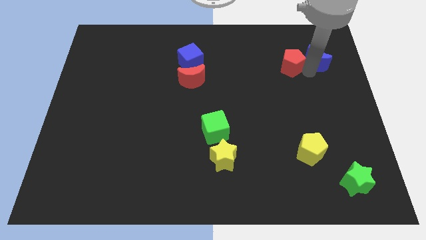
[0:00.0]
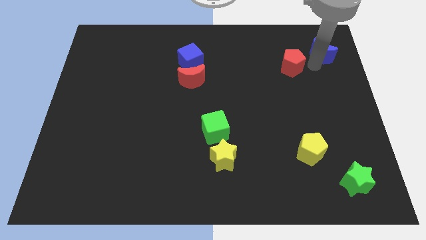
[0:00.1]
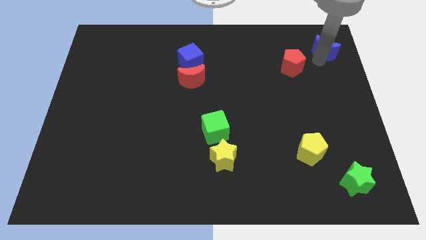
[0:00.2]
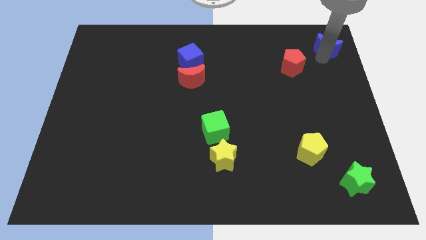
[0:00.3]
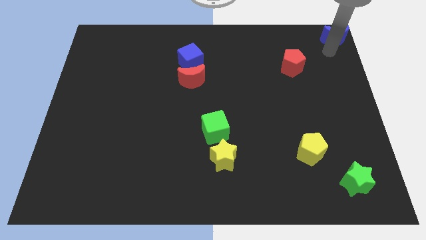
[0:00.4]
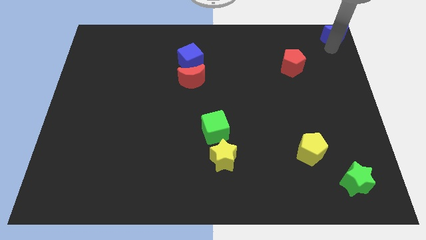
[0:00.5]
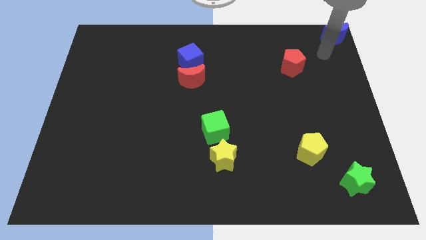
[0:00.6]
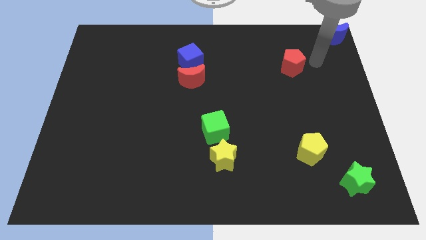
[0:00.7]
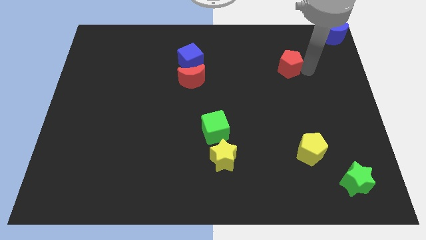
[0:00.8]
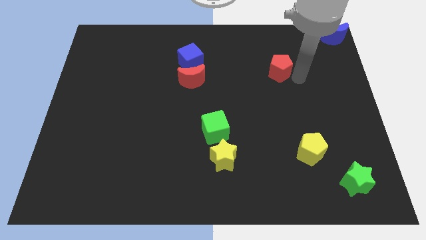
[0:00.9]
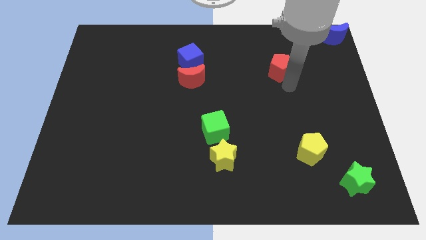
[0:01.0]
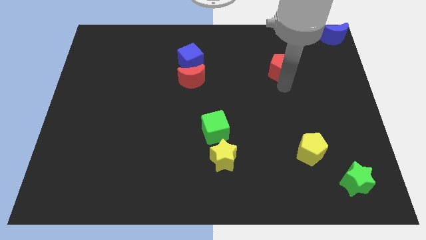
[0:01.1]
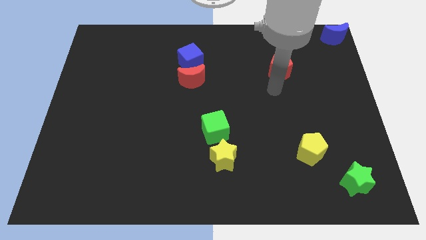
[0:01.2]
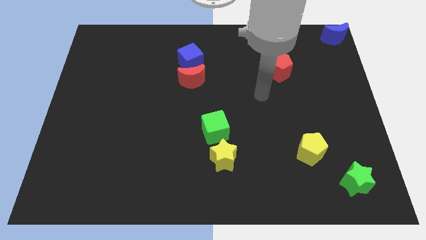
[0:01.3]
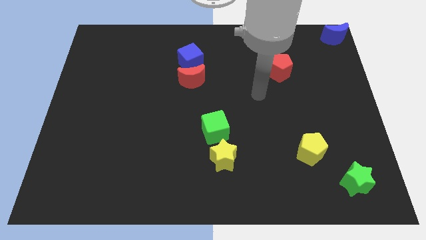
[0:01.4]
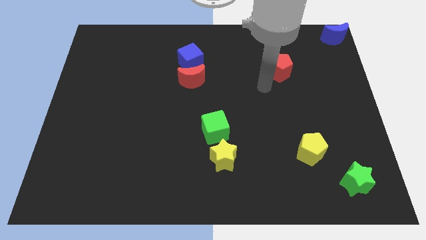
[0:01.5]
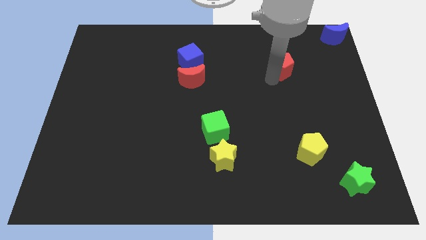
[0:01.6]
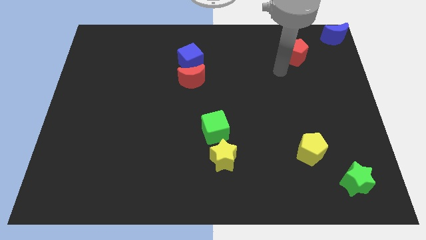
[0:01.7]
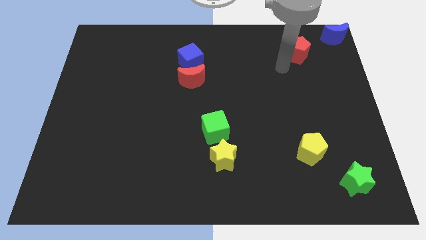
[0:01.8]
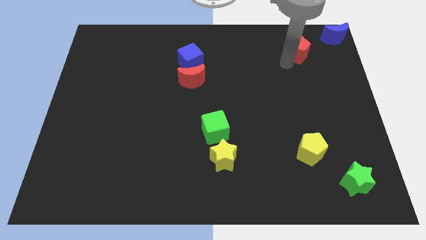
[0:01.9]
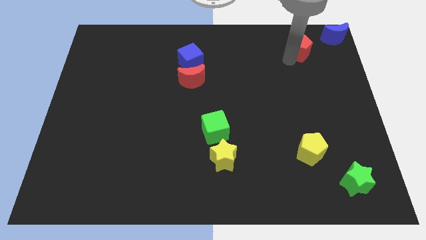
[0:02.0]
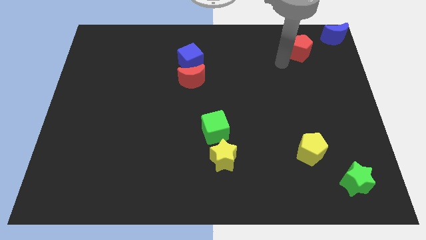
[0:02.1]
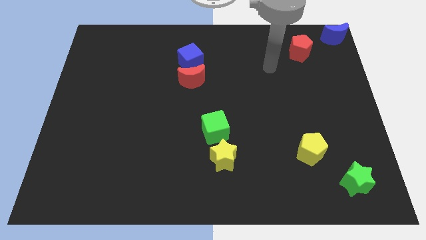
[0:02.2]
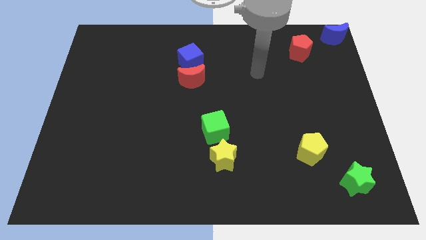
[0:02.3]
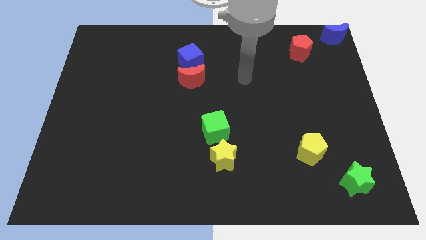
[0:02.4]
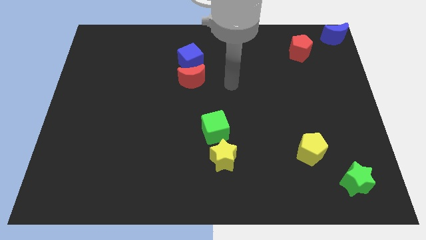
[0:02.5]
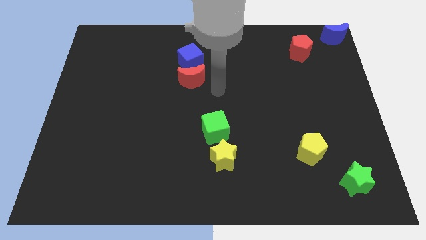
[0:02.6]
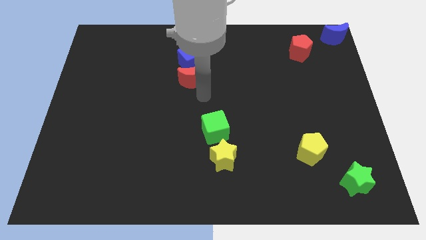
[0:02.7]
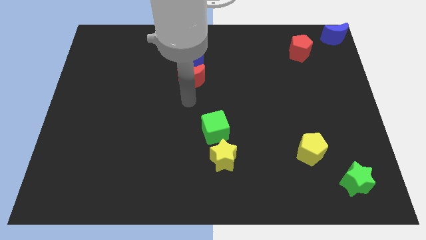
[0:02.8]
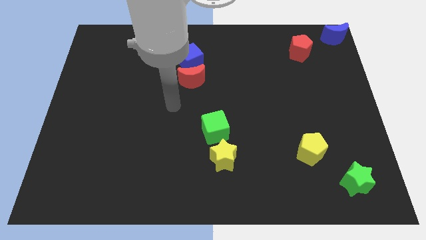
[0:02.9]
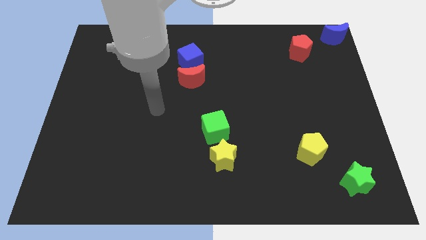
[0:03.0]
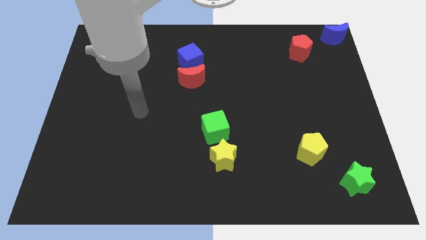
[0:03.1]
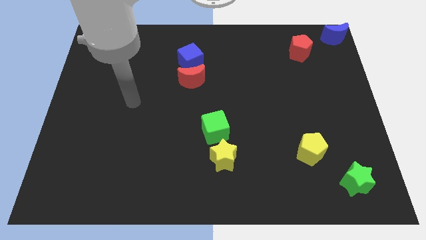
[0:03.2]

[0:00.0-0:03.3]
drag the blue crescent and red pentagon diagonal to each other

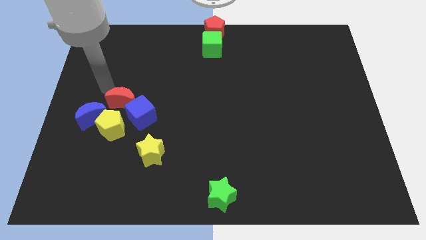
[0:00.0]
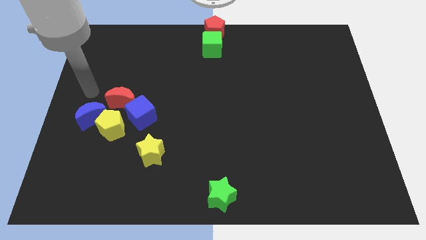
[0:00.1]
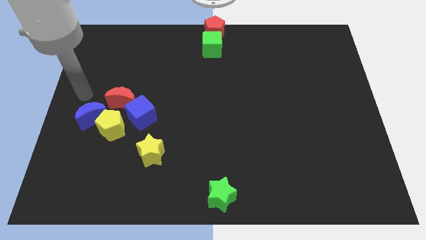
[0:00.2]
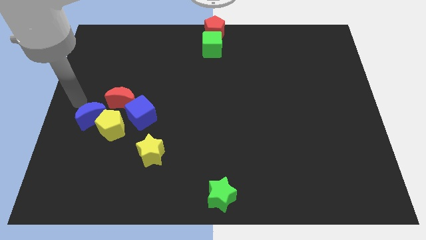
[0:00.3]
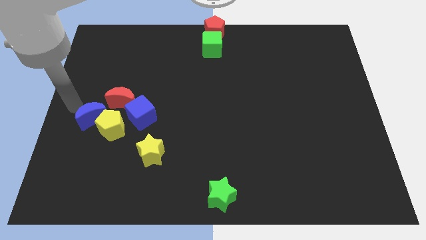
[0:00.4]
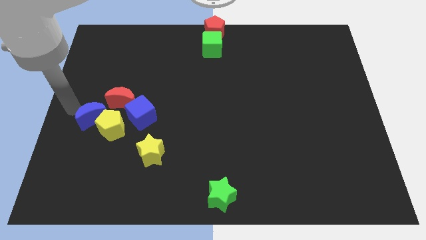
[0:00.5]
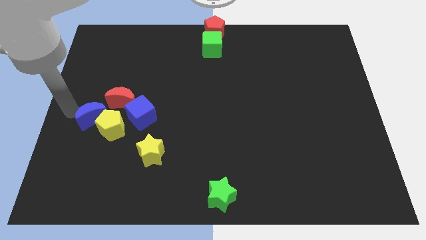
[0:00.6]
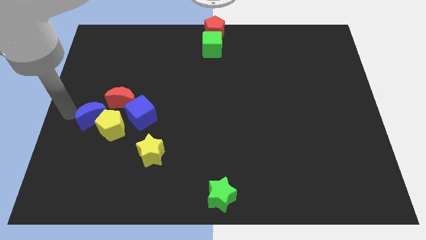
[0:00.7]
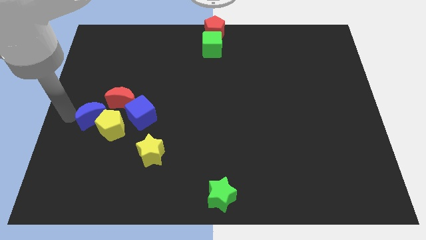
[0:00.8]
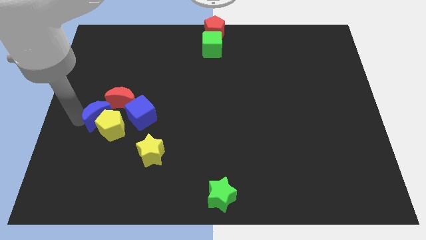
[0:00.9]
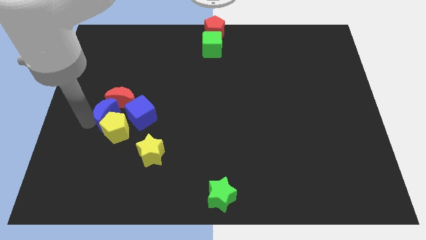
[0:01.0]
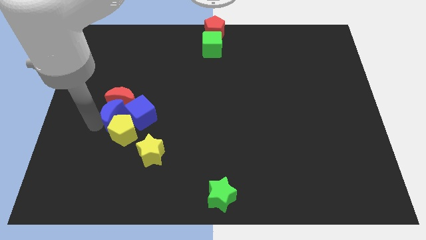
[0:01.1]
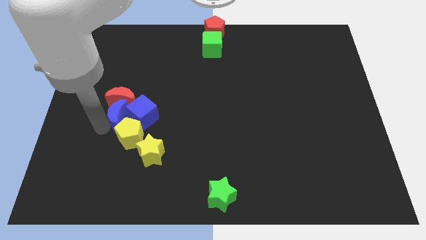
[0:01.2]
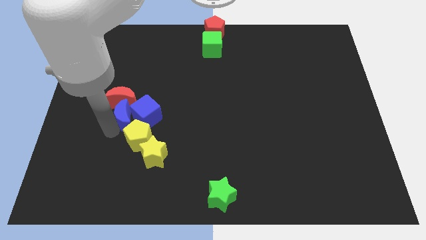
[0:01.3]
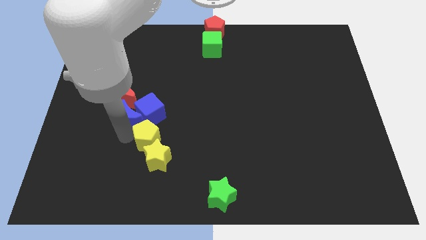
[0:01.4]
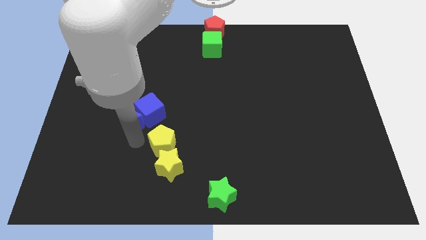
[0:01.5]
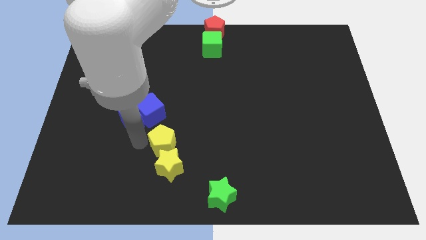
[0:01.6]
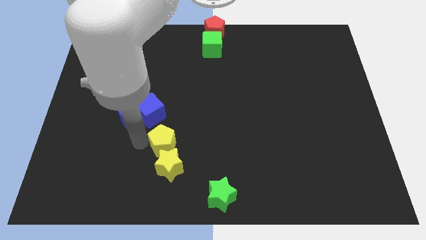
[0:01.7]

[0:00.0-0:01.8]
push a group of blocks downward

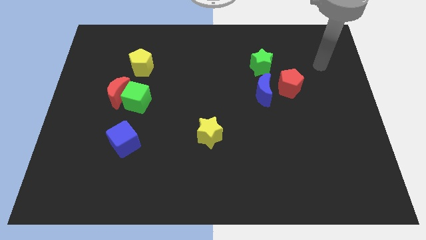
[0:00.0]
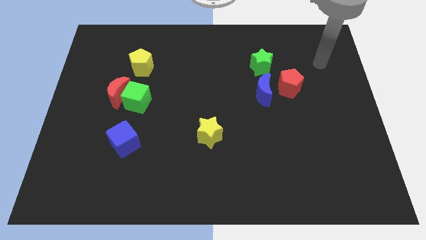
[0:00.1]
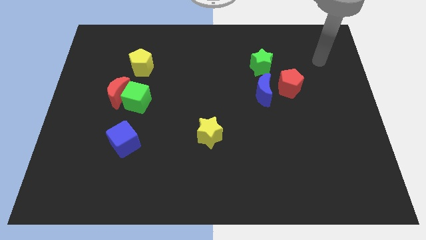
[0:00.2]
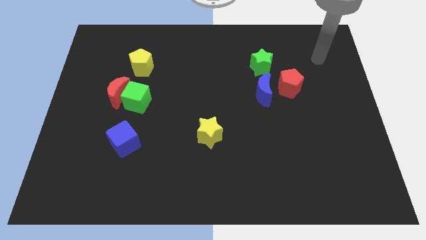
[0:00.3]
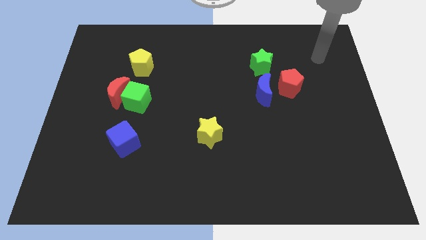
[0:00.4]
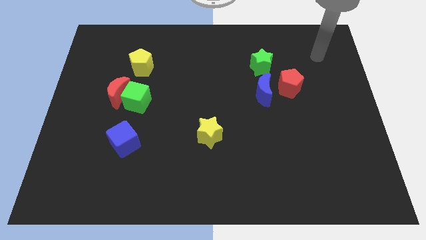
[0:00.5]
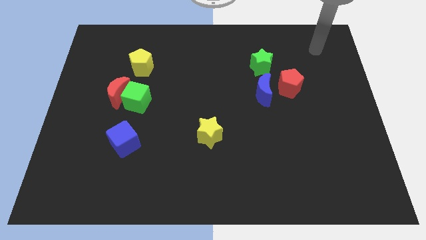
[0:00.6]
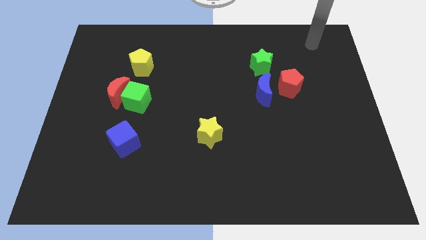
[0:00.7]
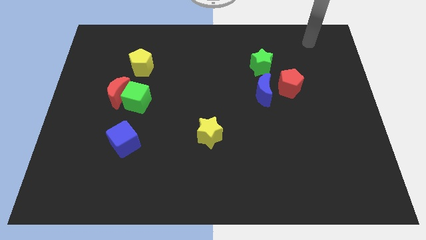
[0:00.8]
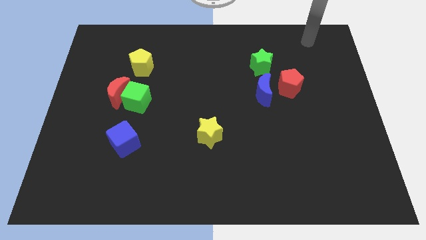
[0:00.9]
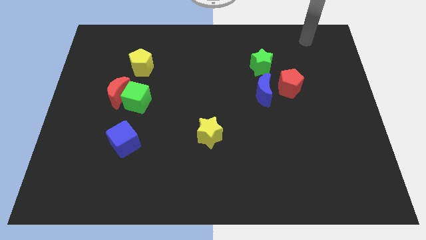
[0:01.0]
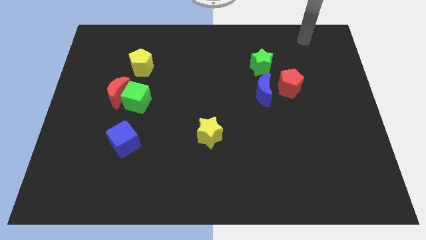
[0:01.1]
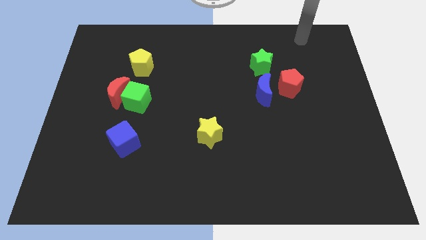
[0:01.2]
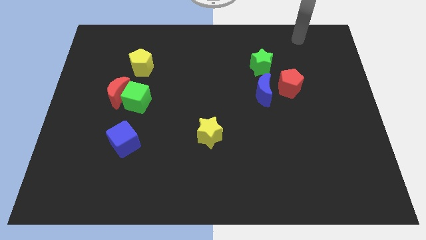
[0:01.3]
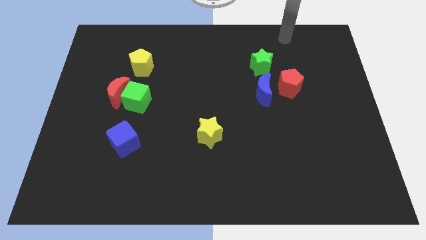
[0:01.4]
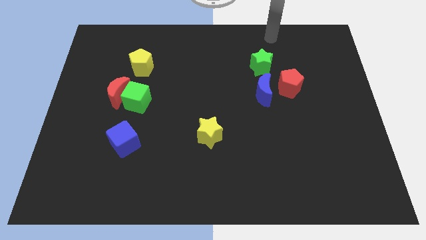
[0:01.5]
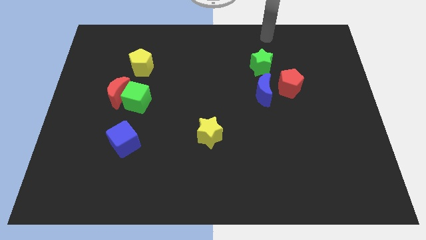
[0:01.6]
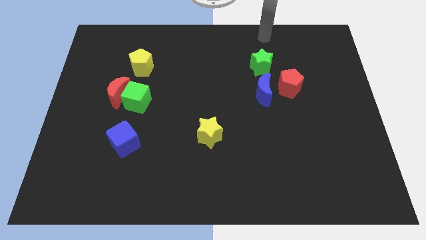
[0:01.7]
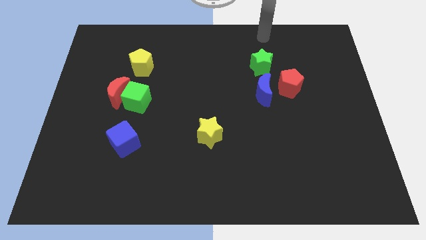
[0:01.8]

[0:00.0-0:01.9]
move your arm to the top of green star

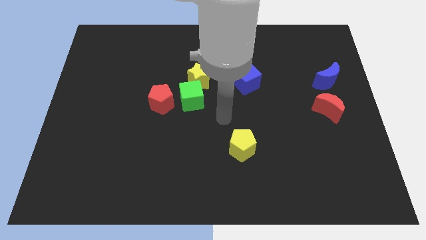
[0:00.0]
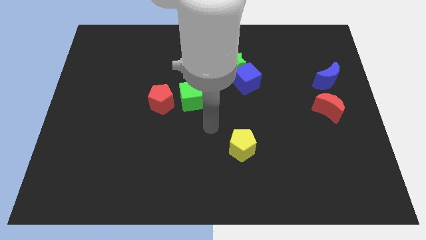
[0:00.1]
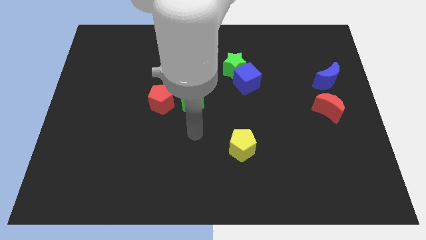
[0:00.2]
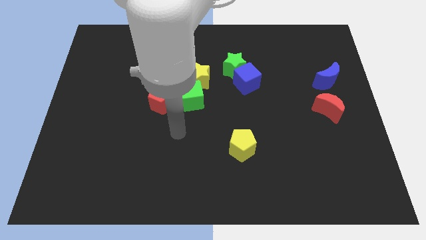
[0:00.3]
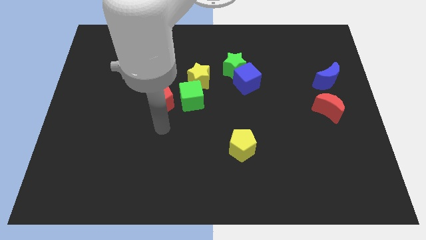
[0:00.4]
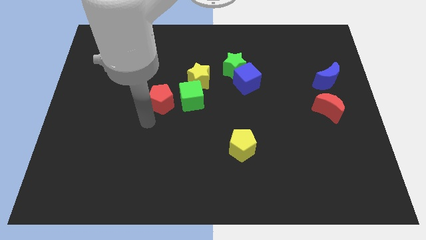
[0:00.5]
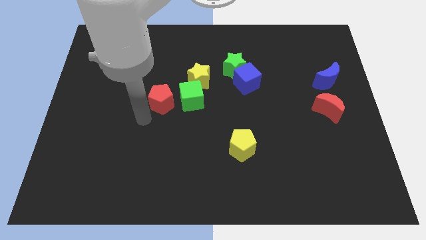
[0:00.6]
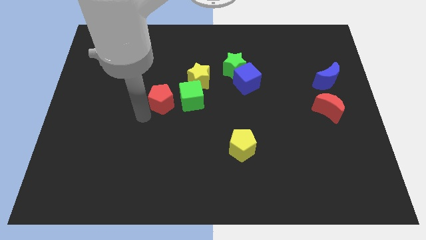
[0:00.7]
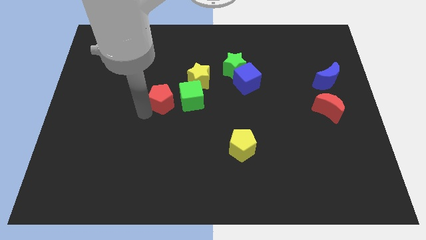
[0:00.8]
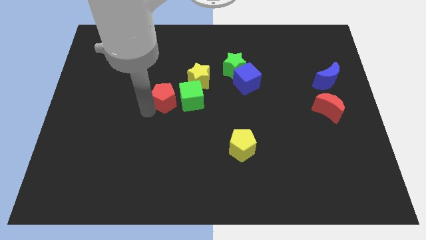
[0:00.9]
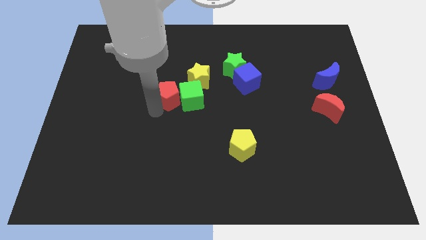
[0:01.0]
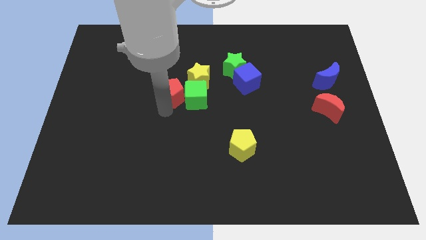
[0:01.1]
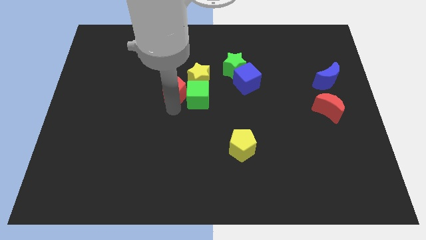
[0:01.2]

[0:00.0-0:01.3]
drag the red pentagon to the left of the green cube

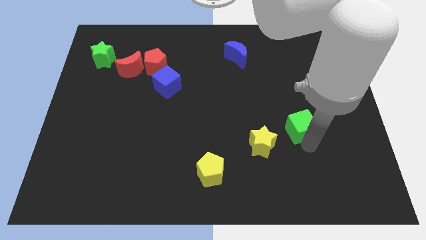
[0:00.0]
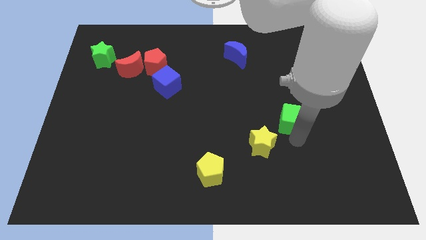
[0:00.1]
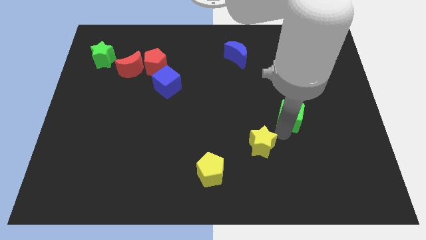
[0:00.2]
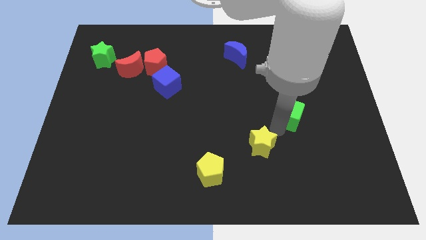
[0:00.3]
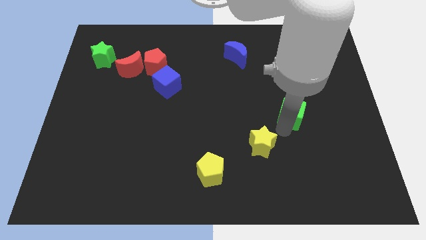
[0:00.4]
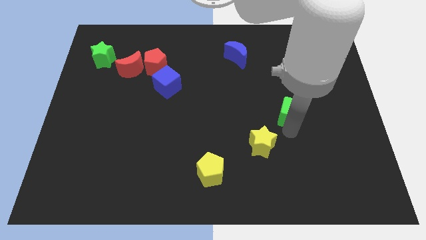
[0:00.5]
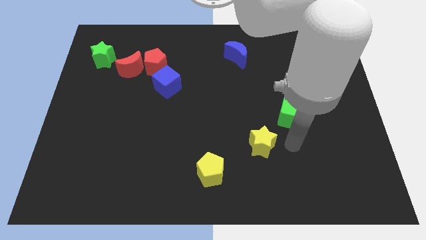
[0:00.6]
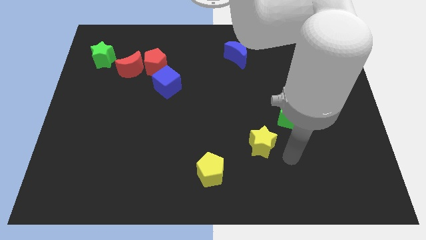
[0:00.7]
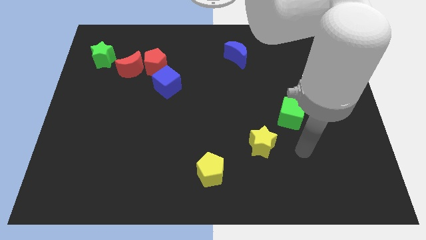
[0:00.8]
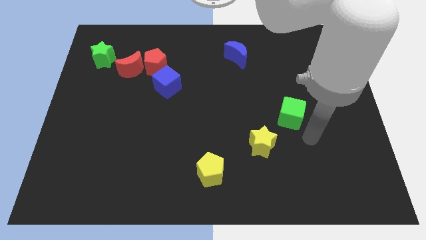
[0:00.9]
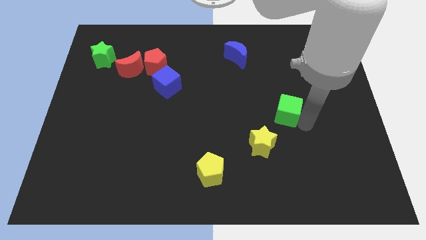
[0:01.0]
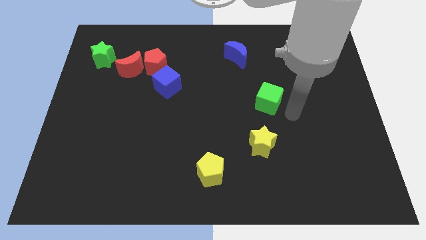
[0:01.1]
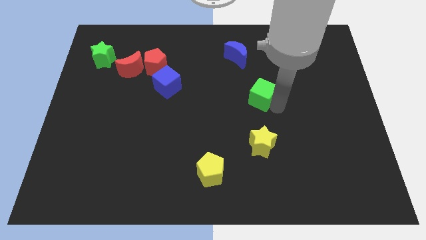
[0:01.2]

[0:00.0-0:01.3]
place the green cube vertically above the yellow star
